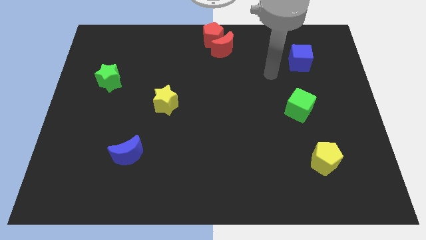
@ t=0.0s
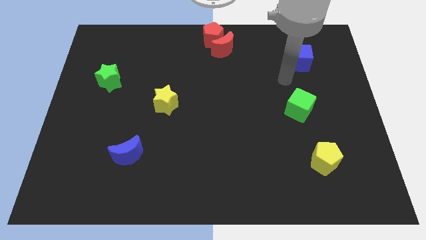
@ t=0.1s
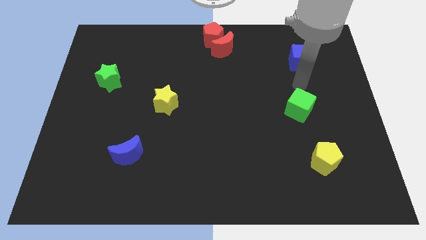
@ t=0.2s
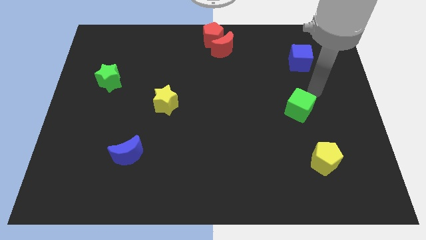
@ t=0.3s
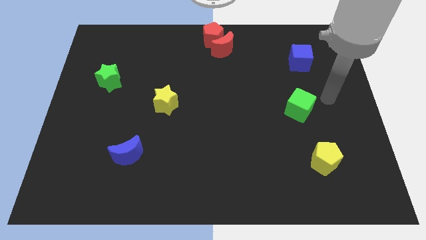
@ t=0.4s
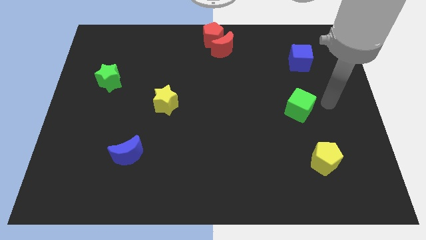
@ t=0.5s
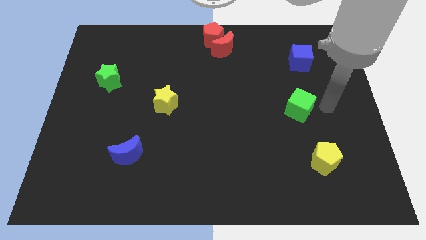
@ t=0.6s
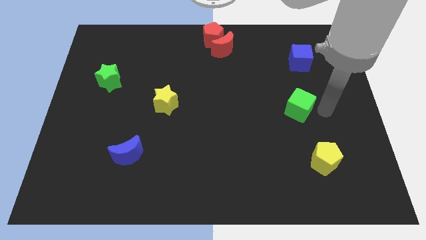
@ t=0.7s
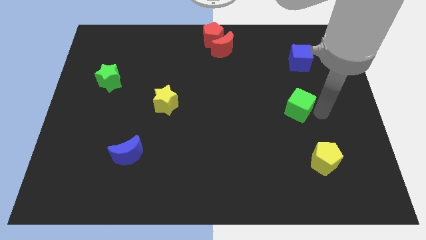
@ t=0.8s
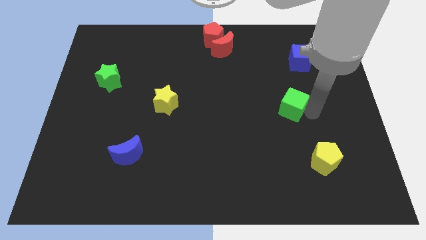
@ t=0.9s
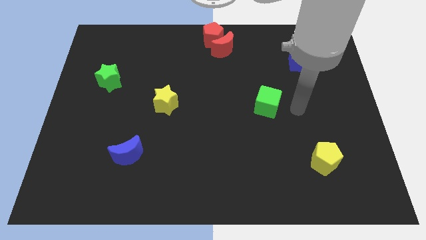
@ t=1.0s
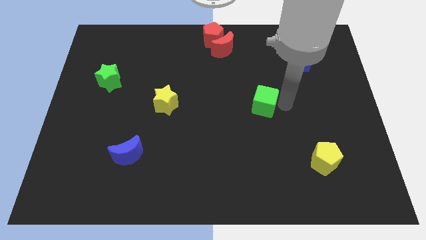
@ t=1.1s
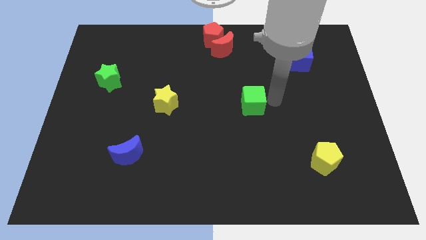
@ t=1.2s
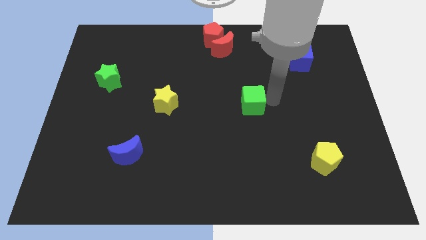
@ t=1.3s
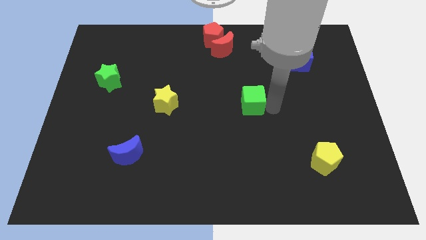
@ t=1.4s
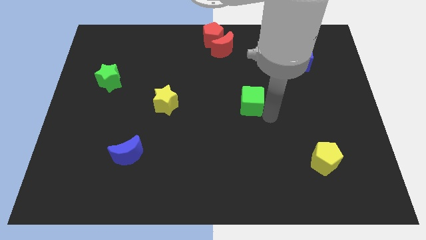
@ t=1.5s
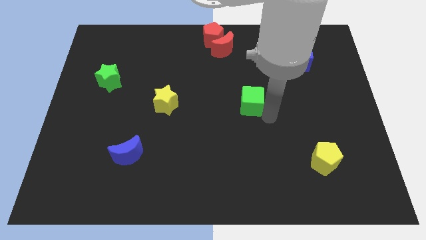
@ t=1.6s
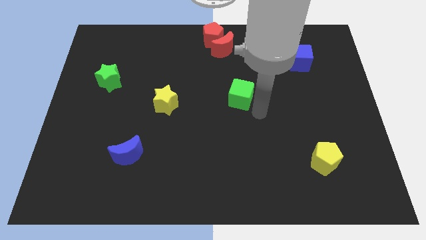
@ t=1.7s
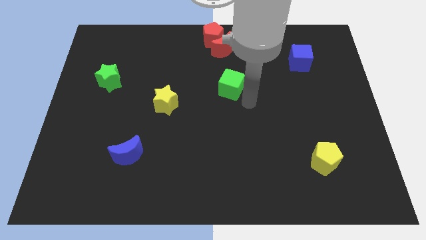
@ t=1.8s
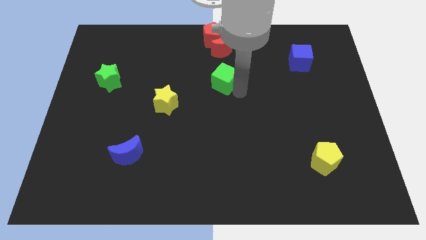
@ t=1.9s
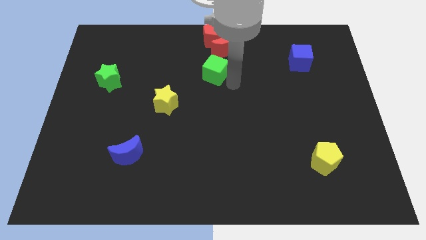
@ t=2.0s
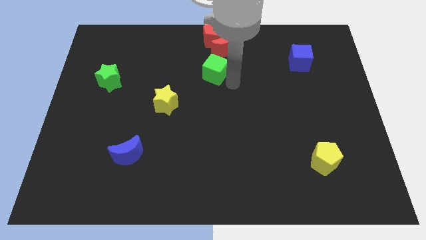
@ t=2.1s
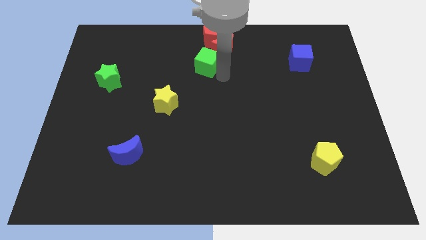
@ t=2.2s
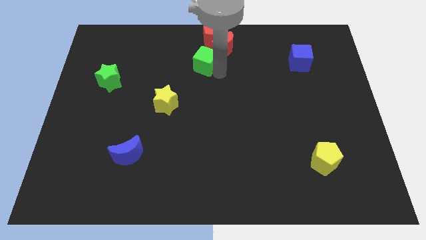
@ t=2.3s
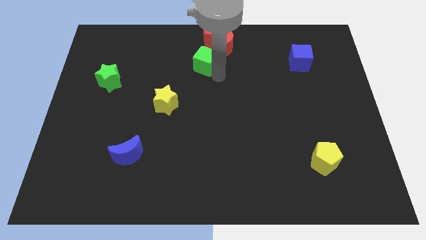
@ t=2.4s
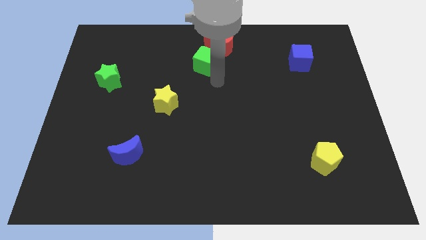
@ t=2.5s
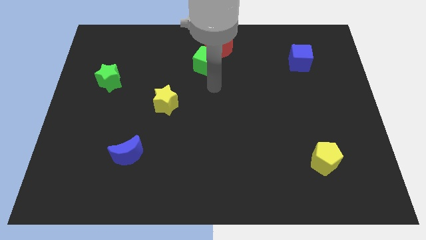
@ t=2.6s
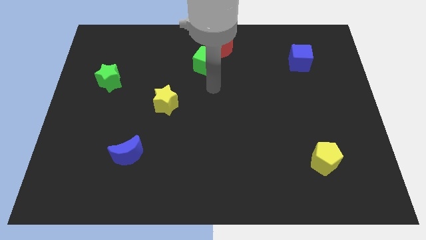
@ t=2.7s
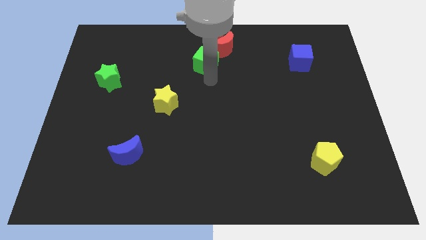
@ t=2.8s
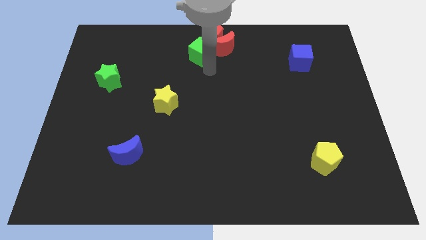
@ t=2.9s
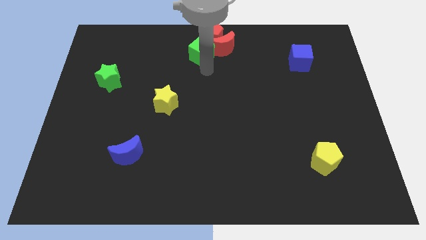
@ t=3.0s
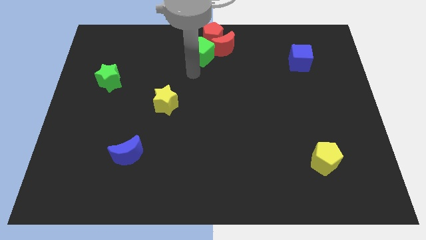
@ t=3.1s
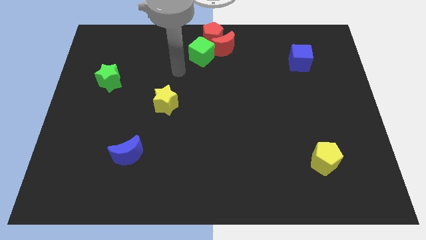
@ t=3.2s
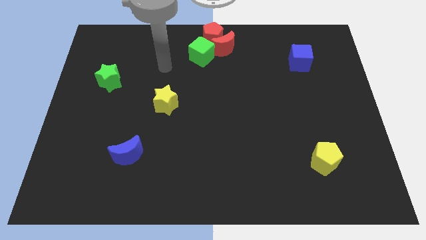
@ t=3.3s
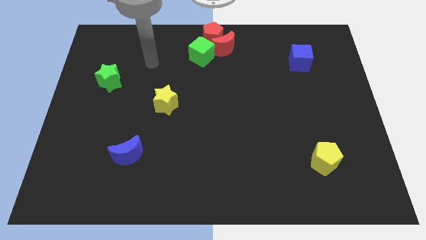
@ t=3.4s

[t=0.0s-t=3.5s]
move green cube left below the red pentagon

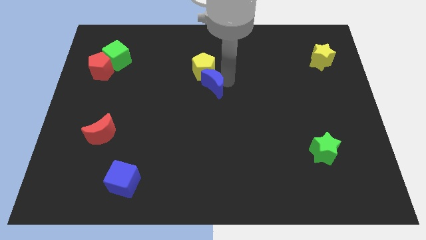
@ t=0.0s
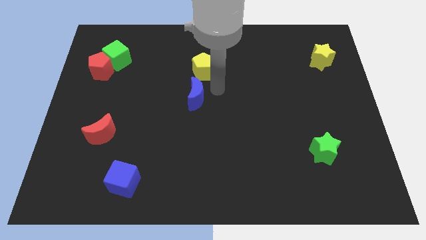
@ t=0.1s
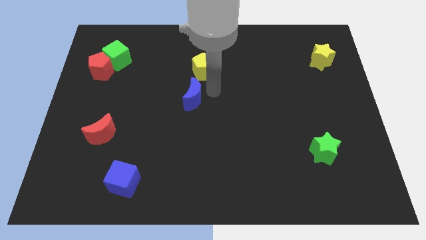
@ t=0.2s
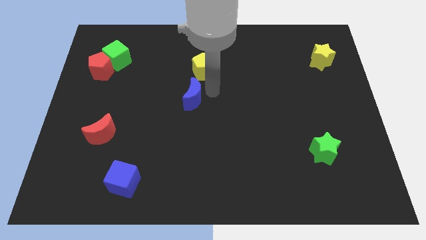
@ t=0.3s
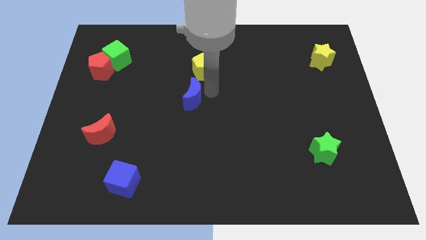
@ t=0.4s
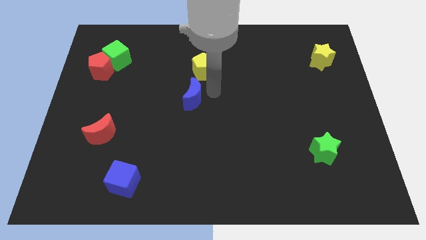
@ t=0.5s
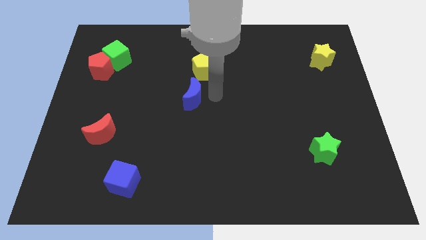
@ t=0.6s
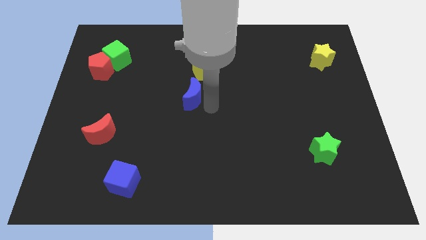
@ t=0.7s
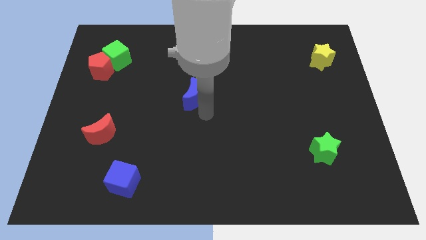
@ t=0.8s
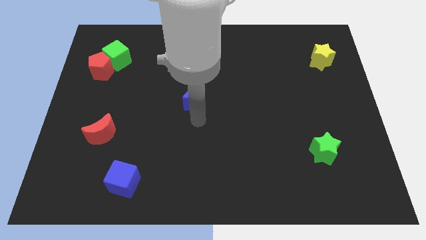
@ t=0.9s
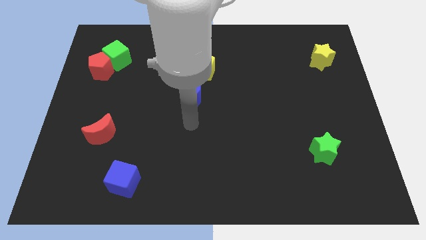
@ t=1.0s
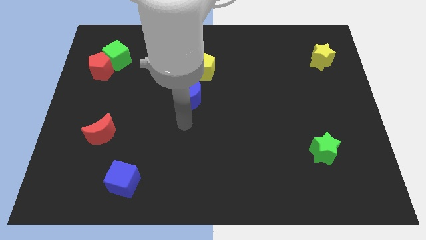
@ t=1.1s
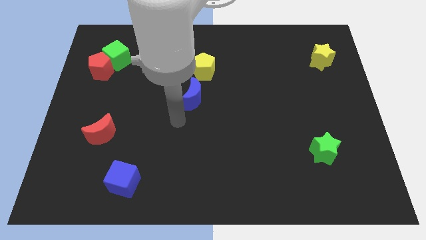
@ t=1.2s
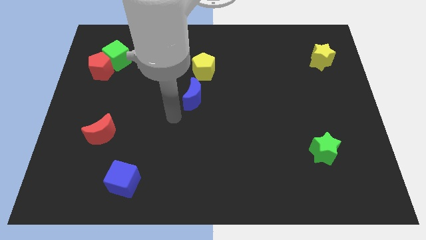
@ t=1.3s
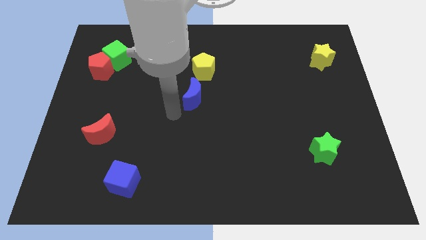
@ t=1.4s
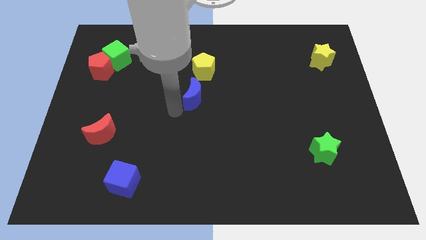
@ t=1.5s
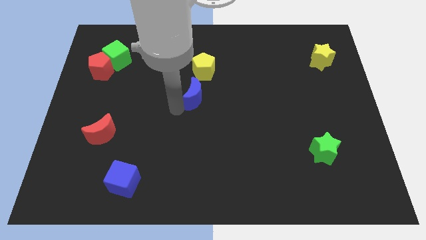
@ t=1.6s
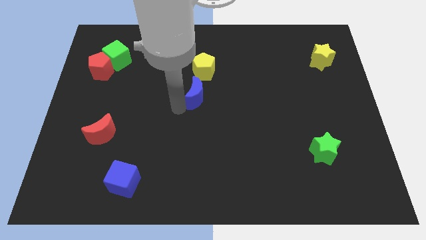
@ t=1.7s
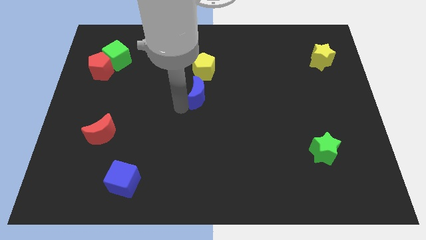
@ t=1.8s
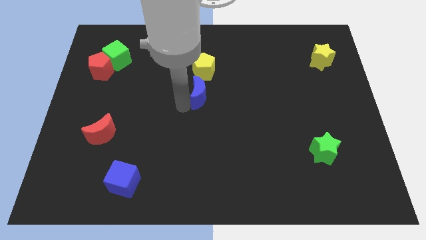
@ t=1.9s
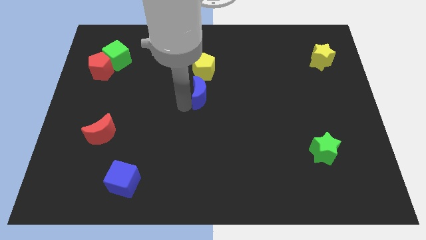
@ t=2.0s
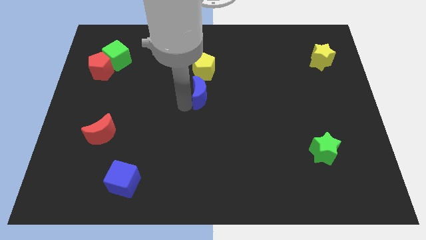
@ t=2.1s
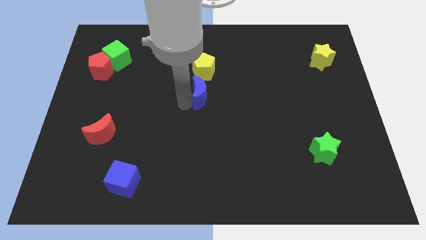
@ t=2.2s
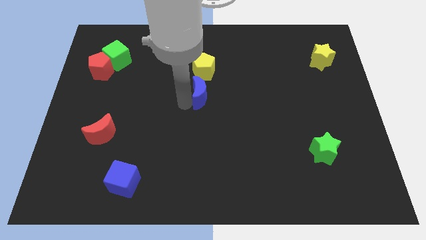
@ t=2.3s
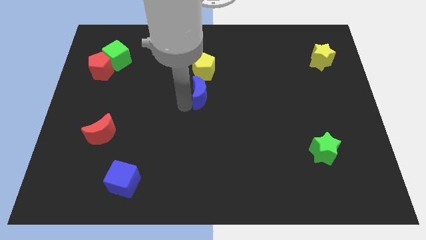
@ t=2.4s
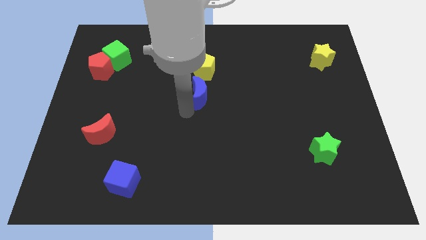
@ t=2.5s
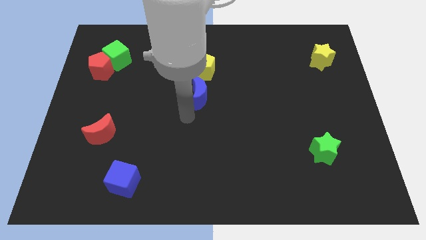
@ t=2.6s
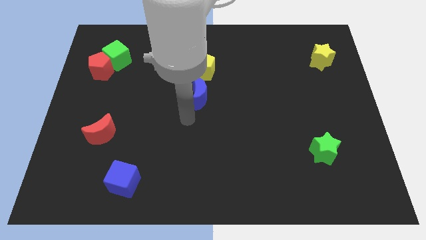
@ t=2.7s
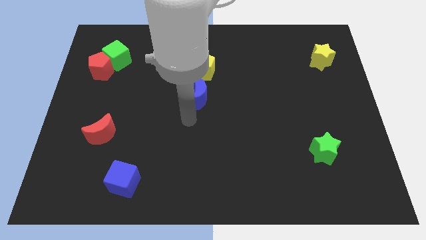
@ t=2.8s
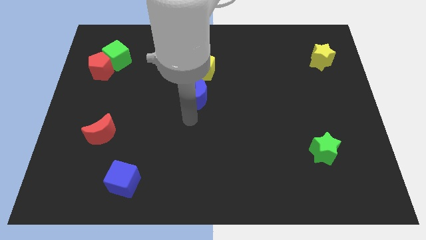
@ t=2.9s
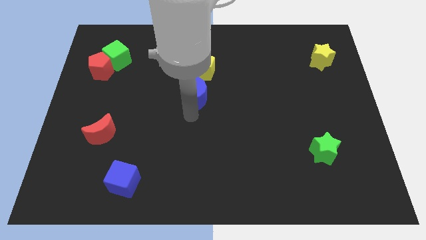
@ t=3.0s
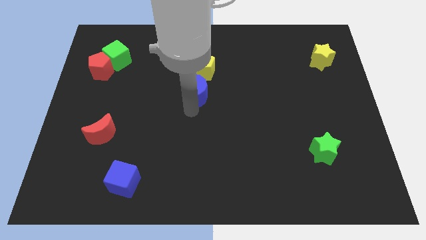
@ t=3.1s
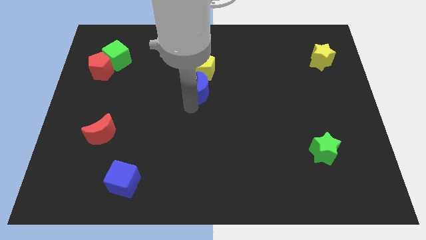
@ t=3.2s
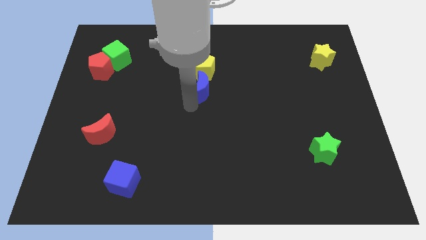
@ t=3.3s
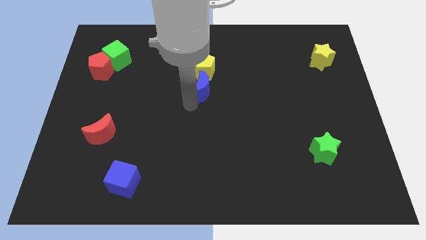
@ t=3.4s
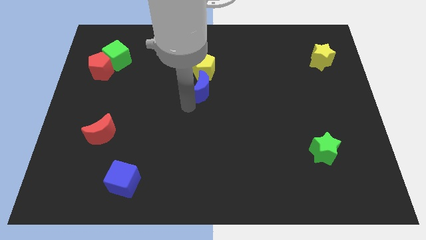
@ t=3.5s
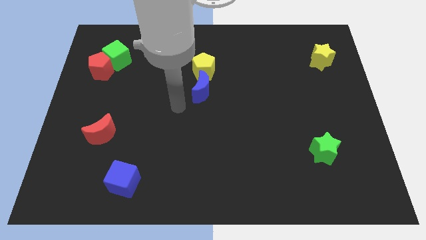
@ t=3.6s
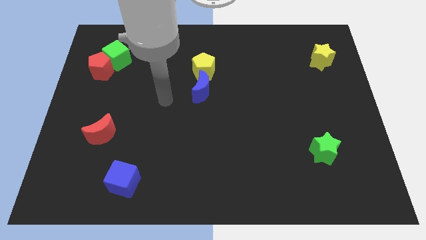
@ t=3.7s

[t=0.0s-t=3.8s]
move the blue crescent into the yellow pentagon

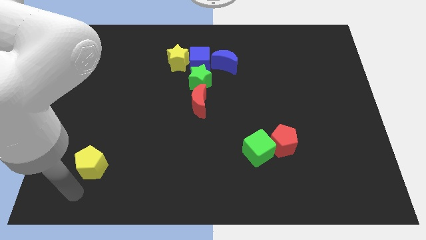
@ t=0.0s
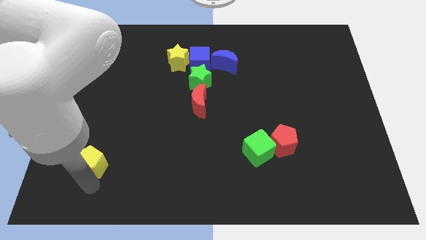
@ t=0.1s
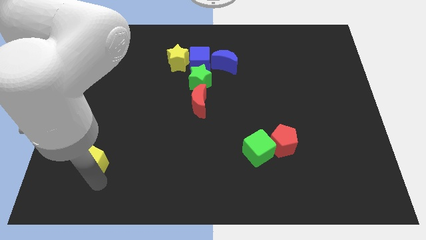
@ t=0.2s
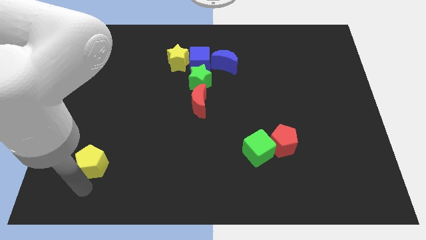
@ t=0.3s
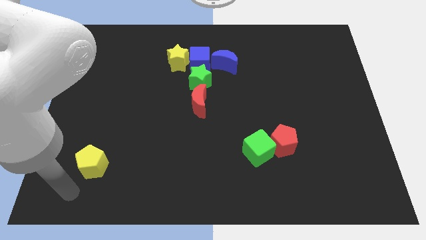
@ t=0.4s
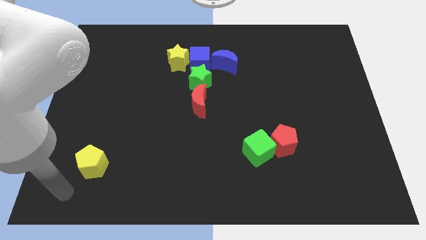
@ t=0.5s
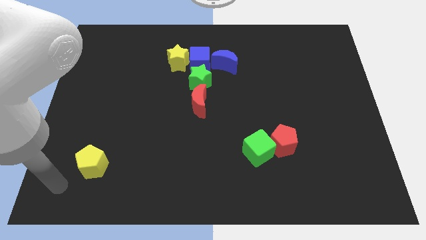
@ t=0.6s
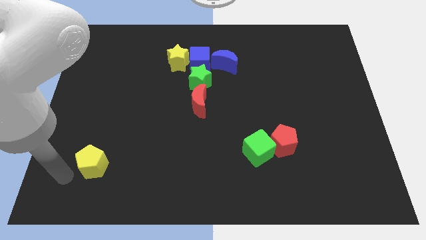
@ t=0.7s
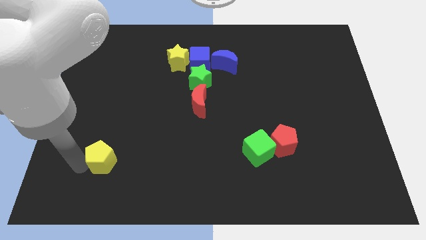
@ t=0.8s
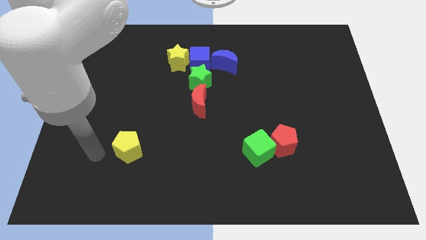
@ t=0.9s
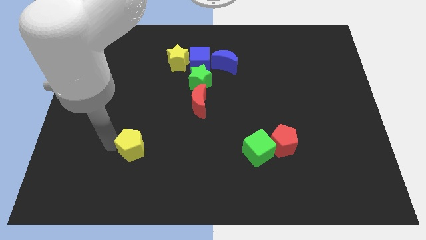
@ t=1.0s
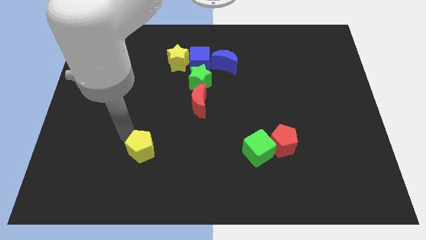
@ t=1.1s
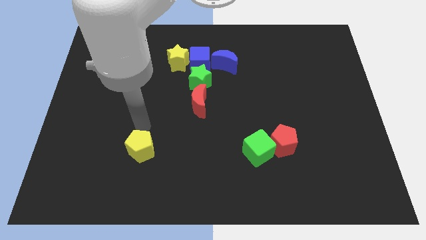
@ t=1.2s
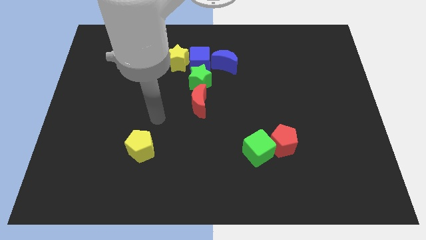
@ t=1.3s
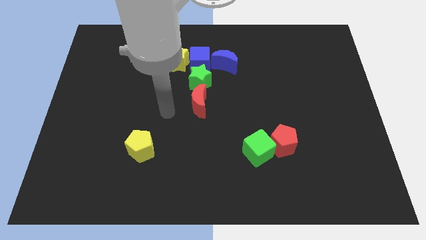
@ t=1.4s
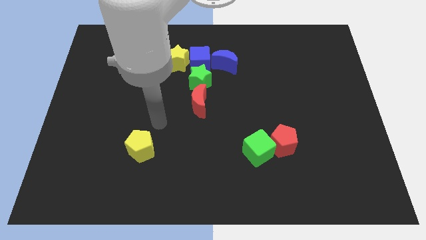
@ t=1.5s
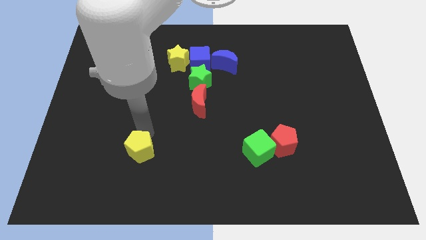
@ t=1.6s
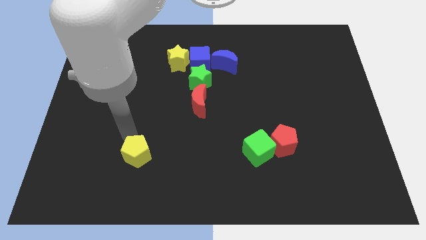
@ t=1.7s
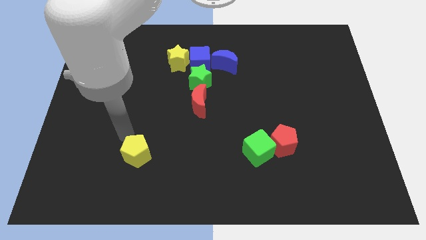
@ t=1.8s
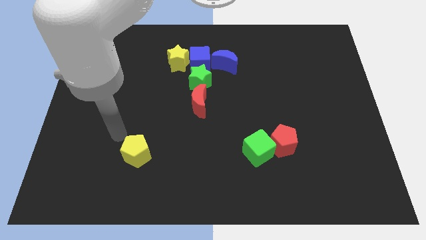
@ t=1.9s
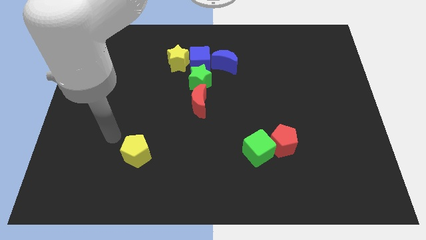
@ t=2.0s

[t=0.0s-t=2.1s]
move yellow pentagon in parallel to the green cube
